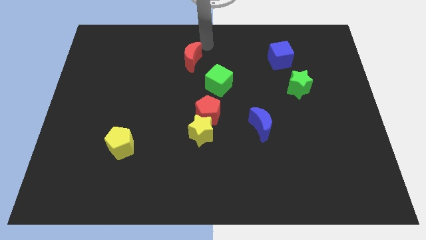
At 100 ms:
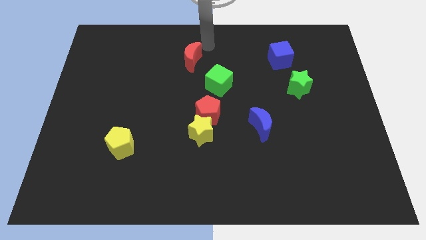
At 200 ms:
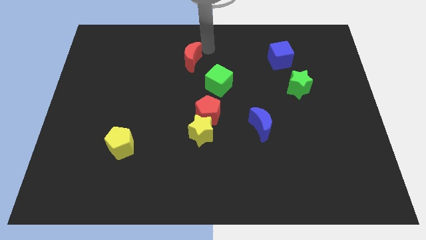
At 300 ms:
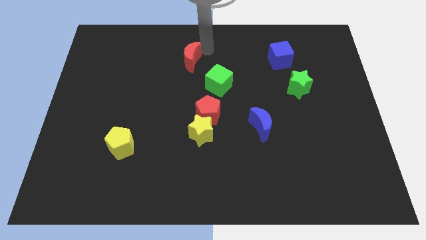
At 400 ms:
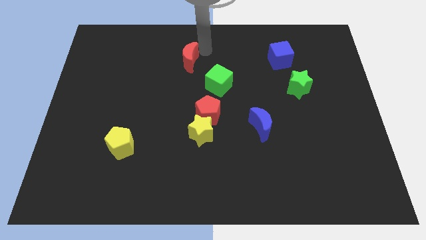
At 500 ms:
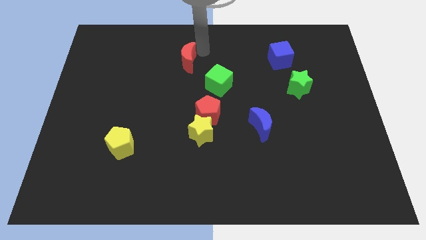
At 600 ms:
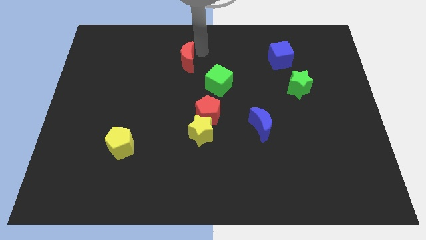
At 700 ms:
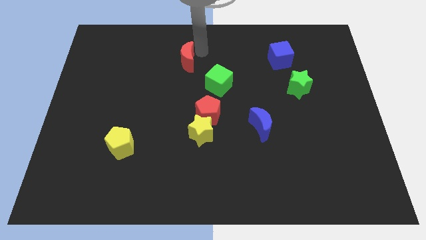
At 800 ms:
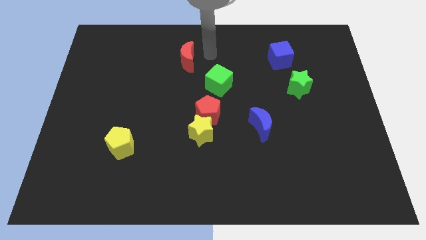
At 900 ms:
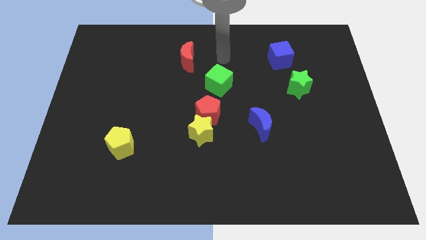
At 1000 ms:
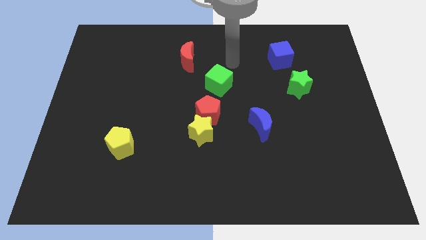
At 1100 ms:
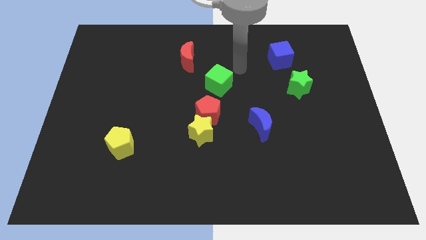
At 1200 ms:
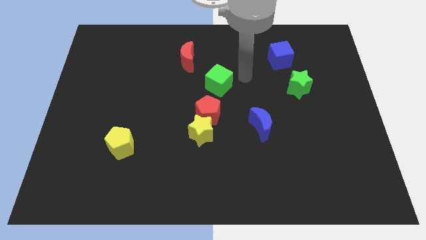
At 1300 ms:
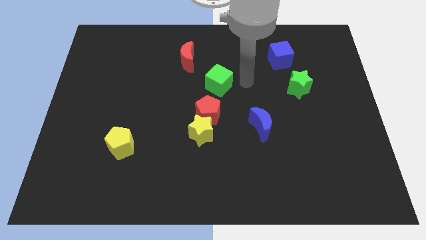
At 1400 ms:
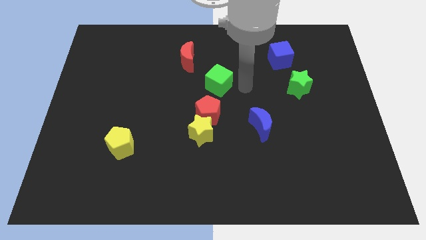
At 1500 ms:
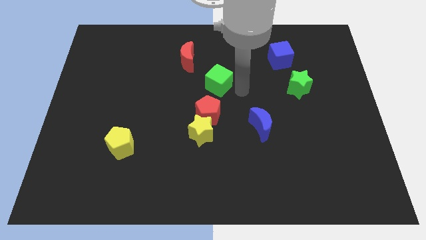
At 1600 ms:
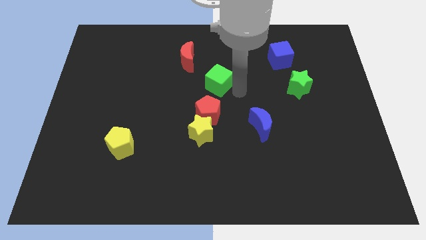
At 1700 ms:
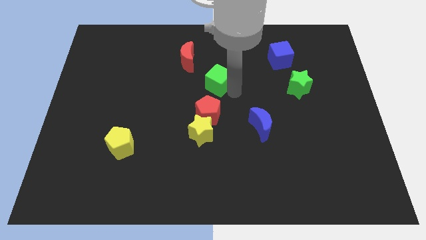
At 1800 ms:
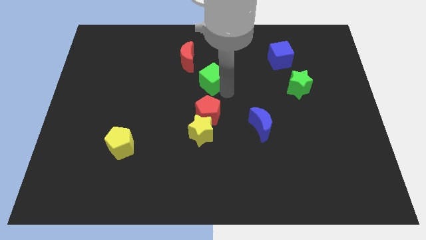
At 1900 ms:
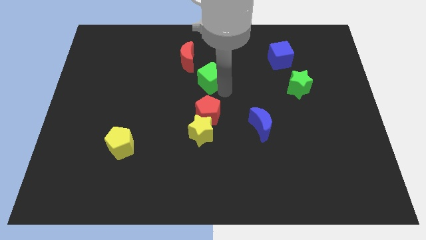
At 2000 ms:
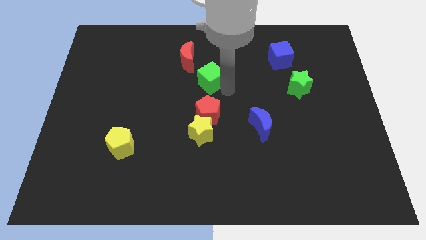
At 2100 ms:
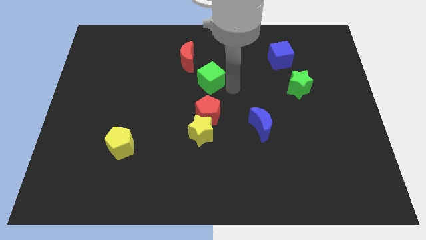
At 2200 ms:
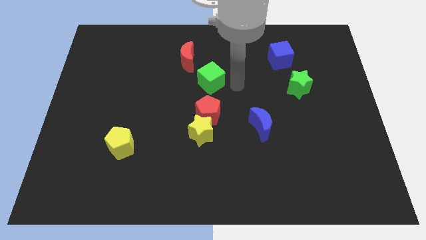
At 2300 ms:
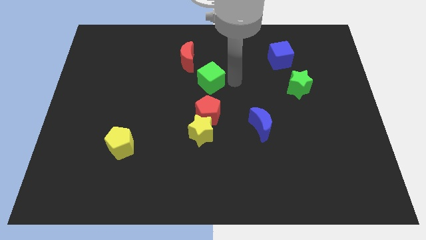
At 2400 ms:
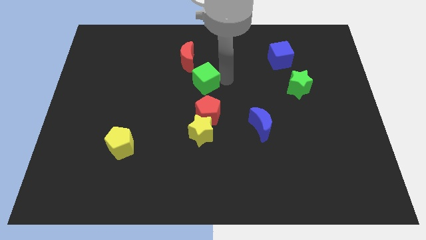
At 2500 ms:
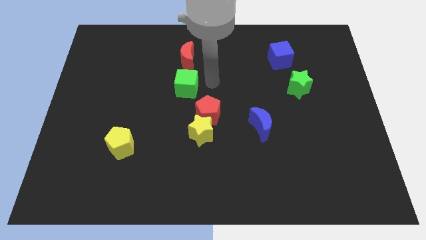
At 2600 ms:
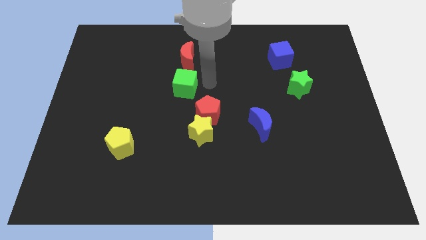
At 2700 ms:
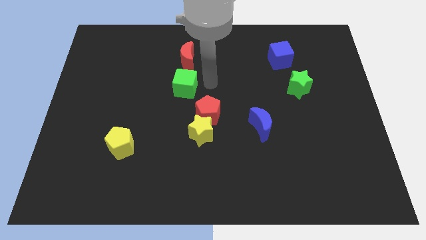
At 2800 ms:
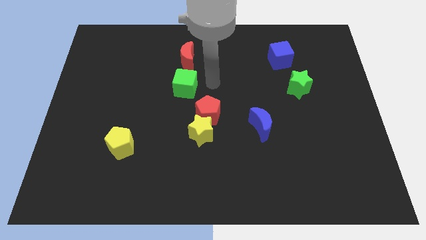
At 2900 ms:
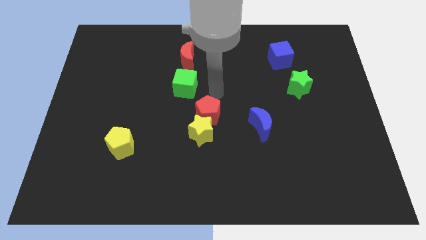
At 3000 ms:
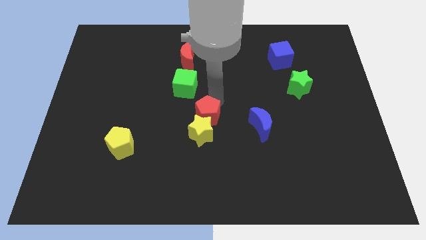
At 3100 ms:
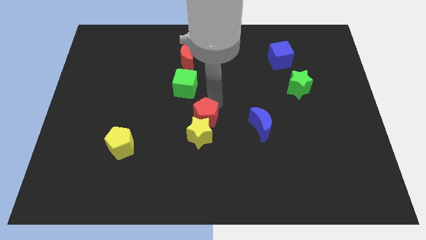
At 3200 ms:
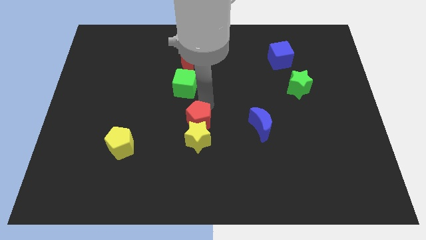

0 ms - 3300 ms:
push the green cube to the bottom of the red crescent

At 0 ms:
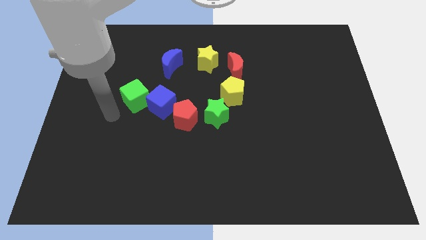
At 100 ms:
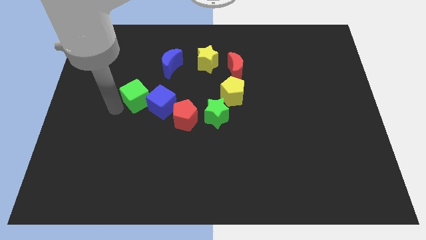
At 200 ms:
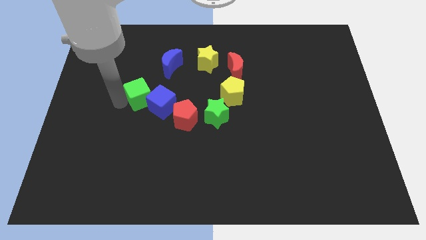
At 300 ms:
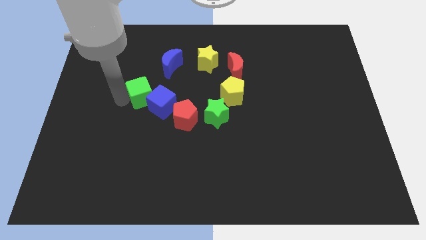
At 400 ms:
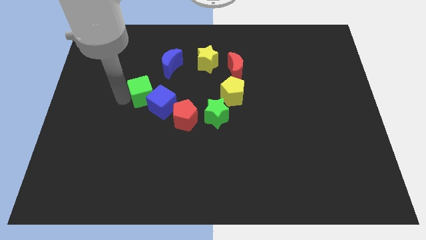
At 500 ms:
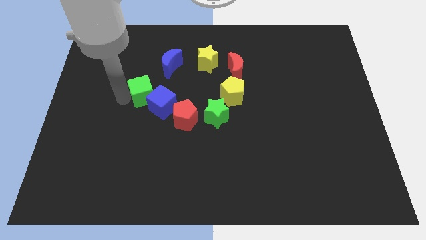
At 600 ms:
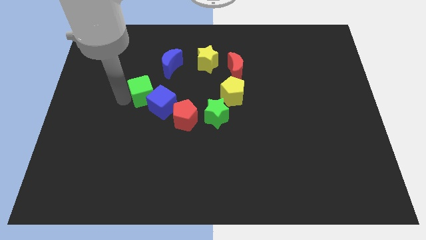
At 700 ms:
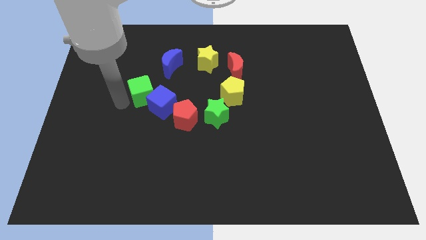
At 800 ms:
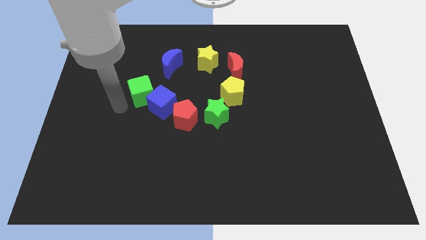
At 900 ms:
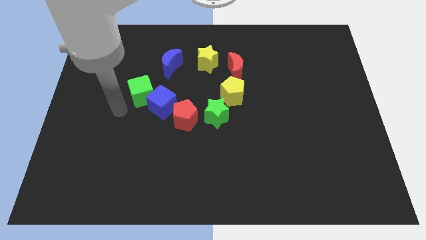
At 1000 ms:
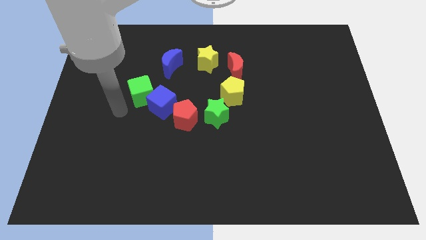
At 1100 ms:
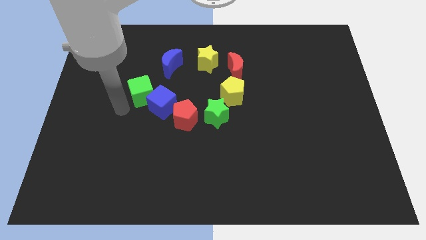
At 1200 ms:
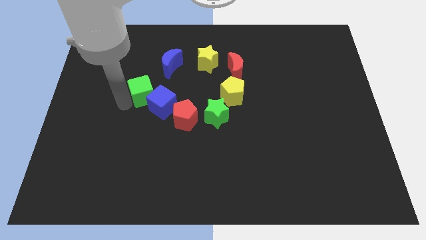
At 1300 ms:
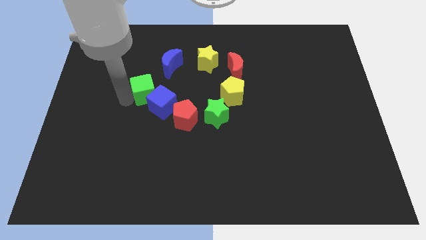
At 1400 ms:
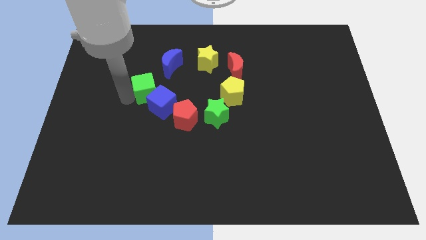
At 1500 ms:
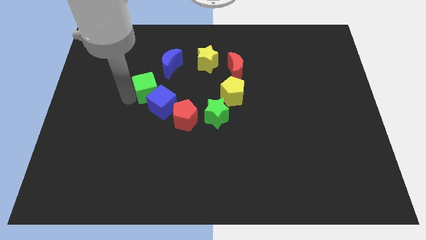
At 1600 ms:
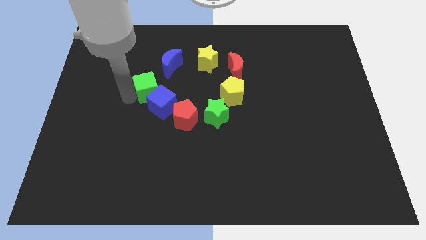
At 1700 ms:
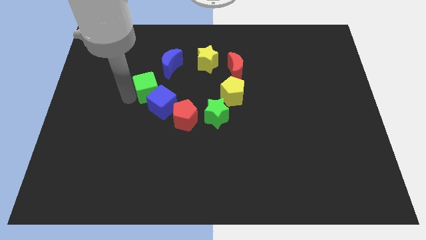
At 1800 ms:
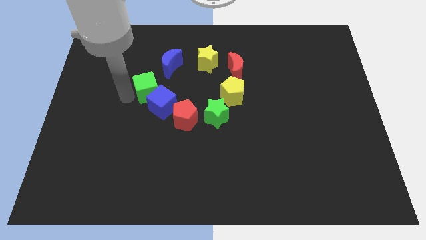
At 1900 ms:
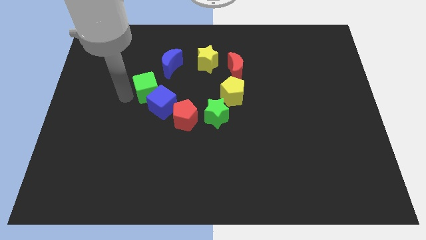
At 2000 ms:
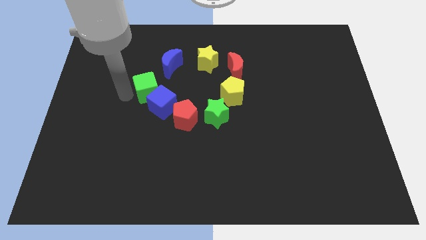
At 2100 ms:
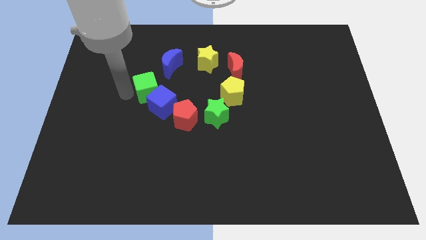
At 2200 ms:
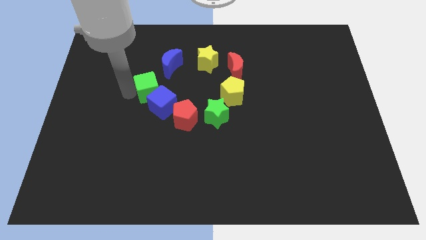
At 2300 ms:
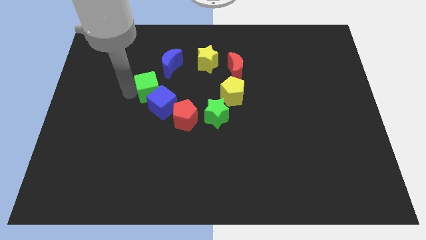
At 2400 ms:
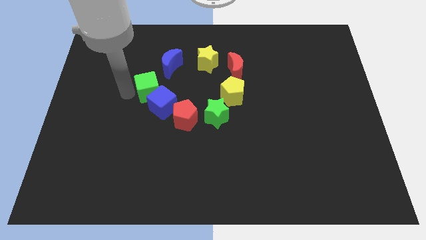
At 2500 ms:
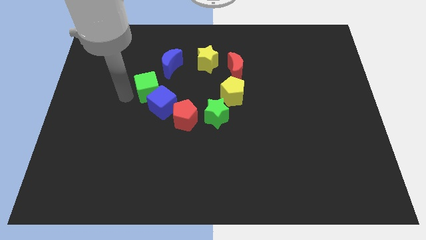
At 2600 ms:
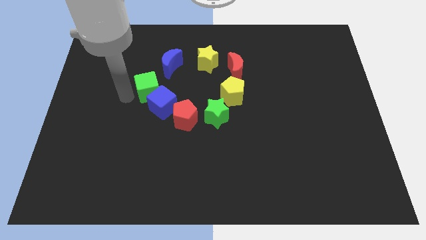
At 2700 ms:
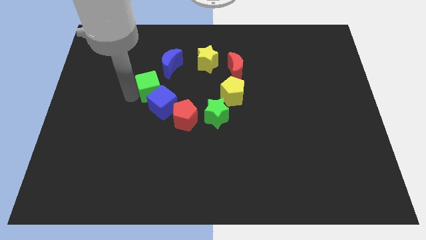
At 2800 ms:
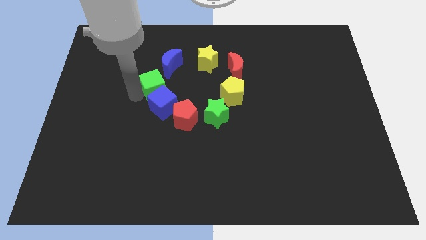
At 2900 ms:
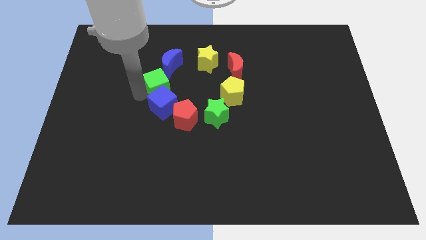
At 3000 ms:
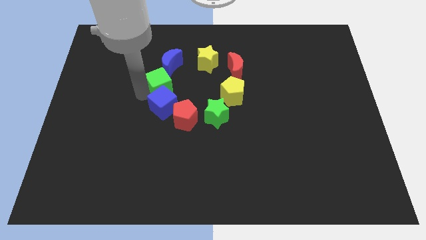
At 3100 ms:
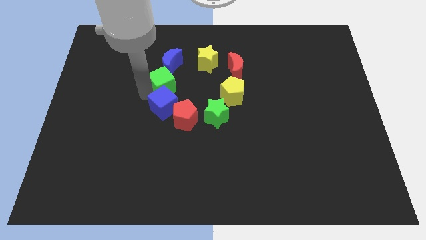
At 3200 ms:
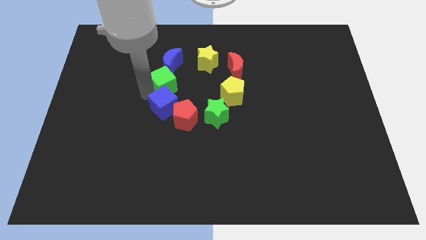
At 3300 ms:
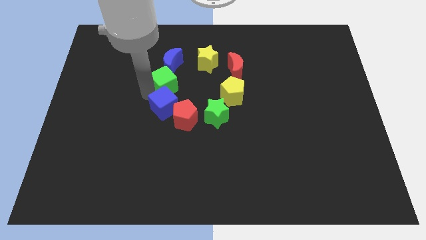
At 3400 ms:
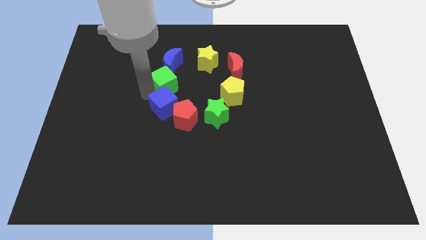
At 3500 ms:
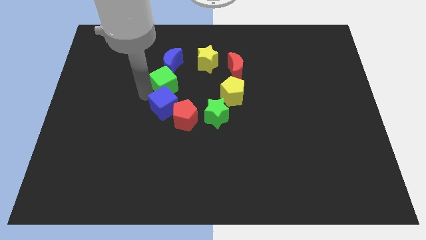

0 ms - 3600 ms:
make all the blocks in the form of circle

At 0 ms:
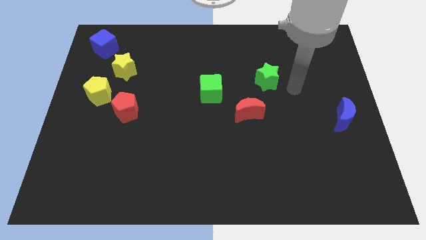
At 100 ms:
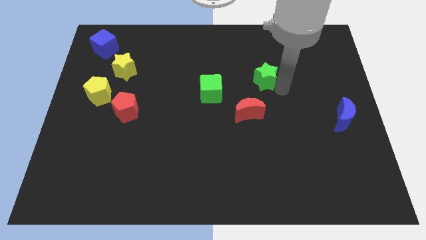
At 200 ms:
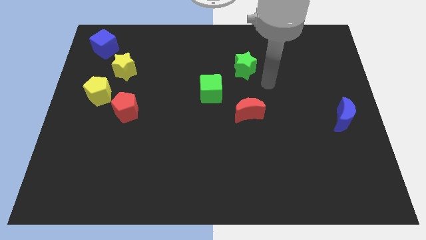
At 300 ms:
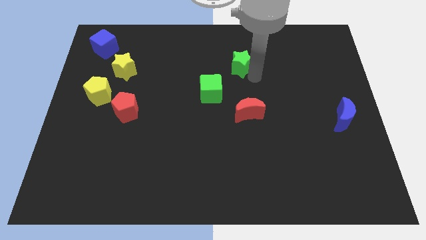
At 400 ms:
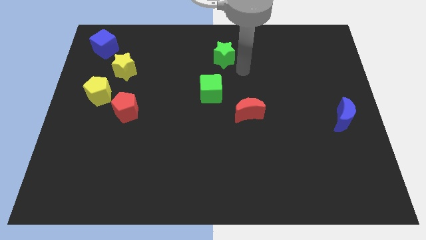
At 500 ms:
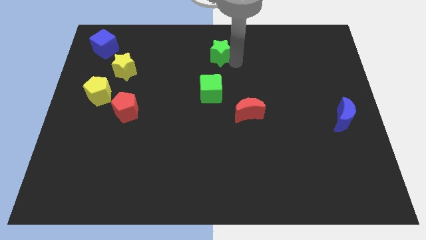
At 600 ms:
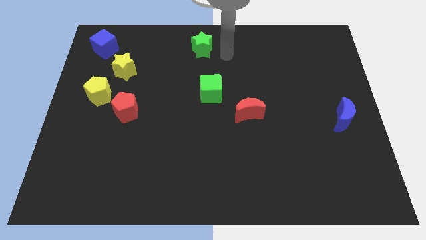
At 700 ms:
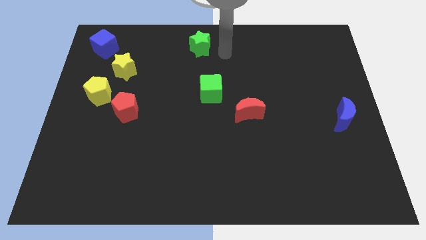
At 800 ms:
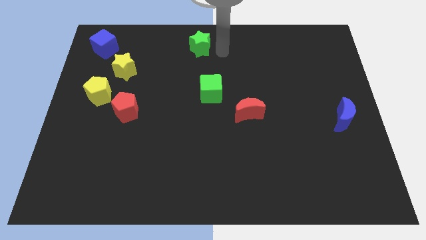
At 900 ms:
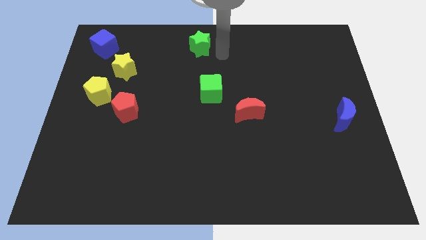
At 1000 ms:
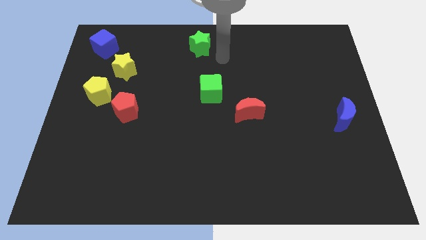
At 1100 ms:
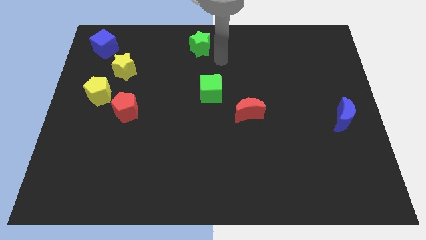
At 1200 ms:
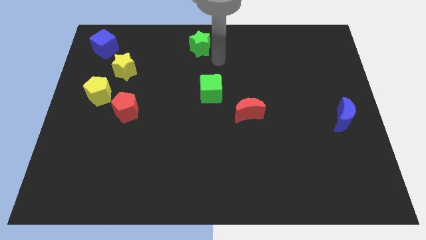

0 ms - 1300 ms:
push the green star towards the top side of the board

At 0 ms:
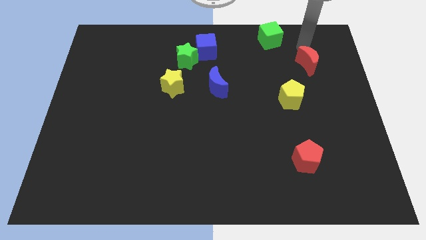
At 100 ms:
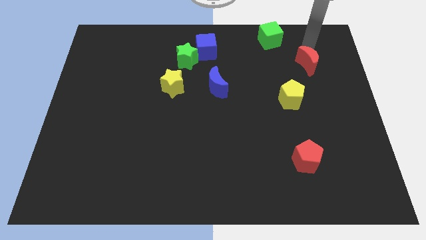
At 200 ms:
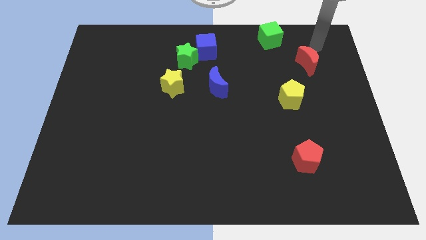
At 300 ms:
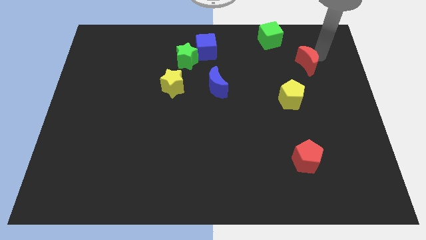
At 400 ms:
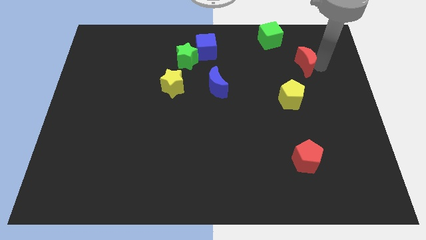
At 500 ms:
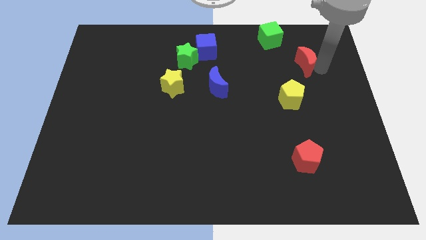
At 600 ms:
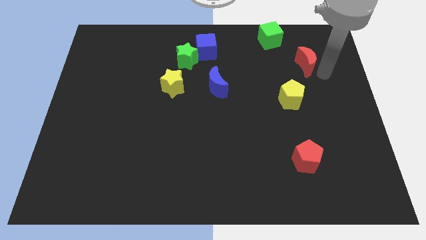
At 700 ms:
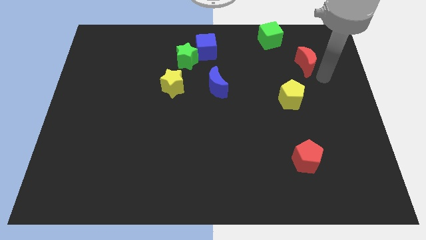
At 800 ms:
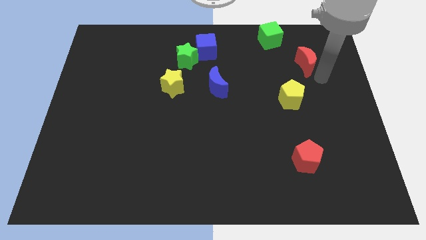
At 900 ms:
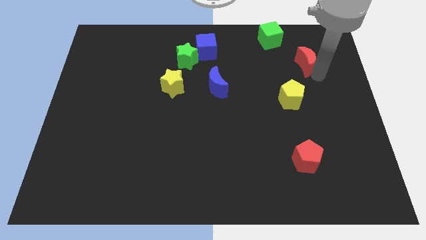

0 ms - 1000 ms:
tap the right side of the red crescent
